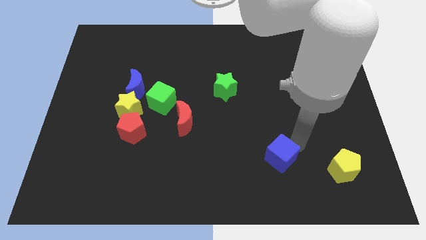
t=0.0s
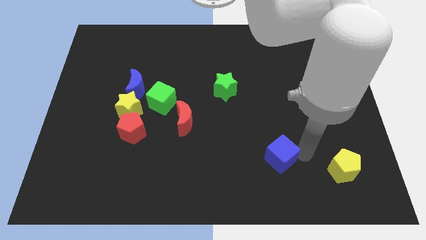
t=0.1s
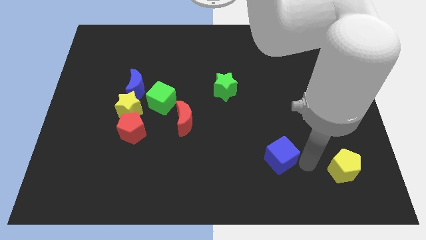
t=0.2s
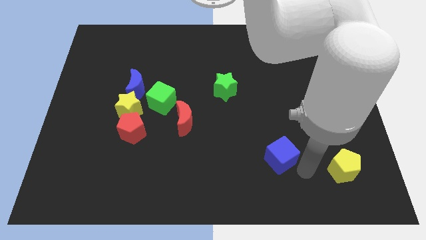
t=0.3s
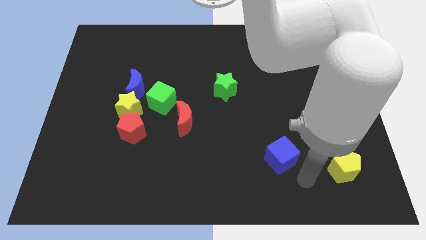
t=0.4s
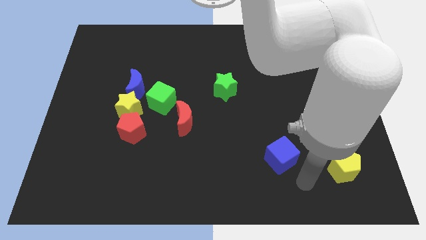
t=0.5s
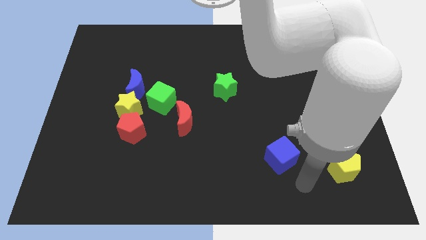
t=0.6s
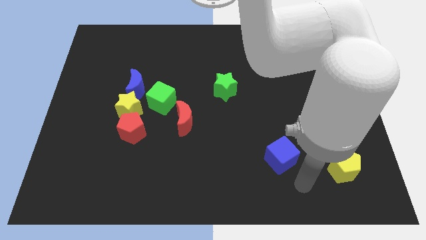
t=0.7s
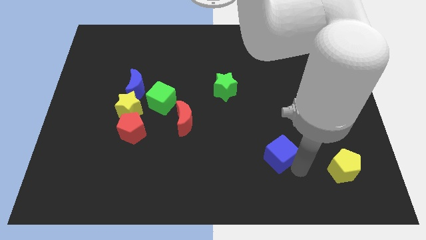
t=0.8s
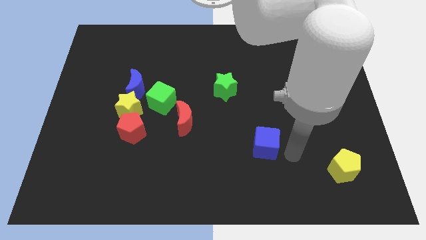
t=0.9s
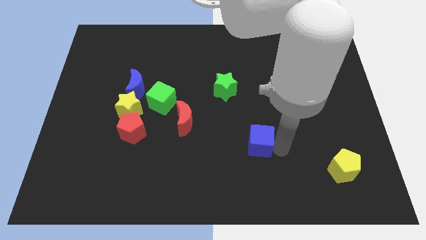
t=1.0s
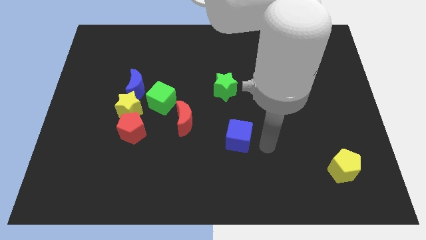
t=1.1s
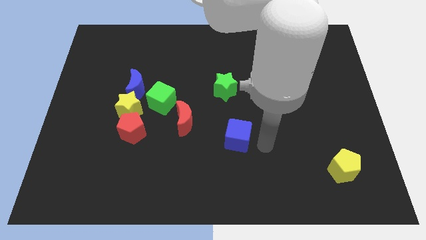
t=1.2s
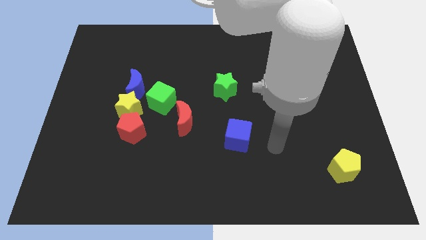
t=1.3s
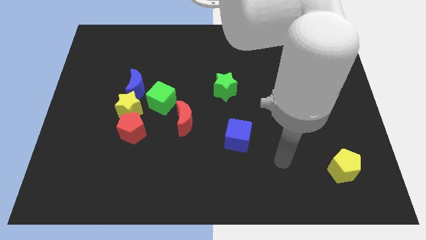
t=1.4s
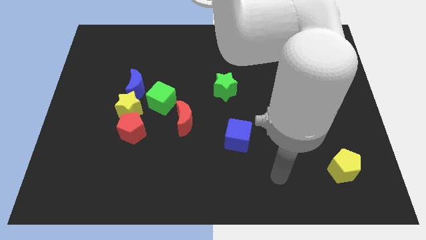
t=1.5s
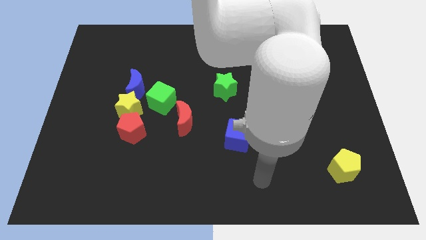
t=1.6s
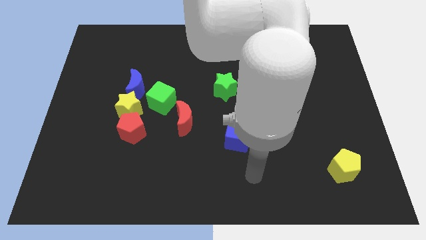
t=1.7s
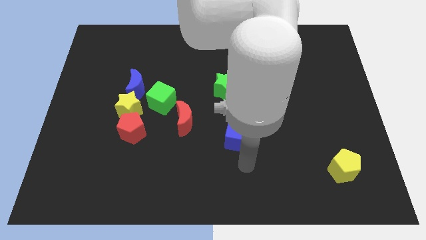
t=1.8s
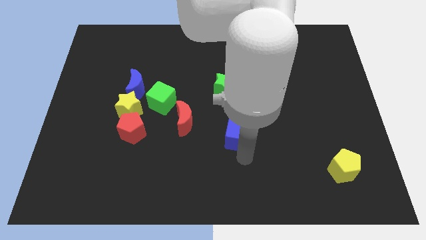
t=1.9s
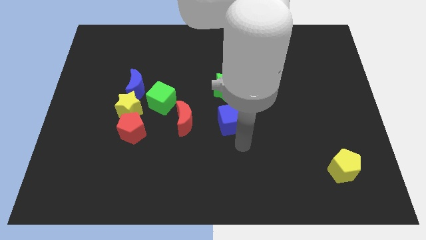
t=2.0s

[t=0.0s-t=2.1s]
push the blue cube to the bottom of the green star

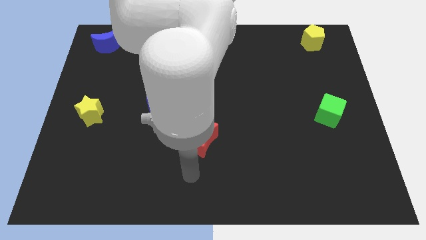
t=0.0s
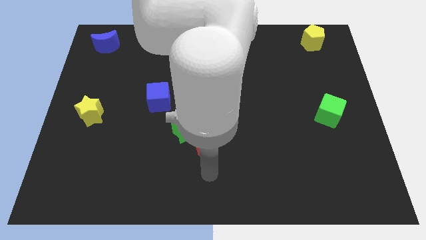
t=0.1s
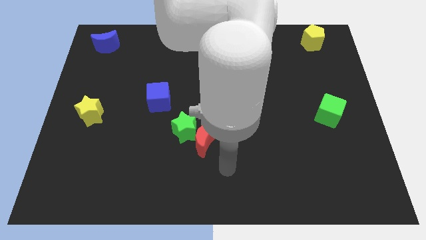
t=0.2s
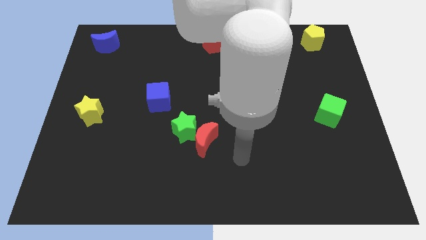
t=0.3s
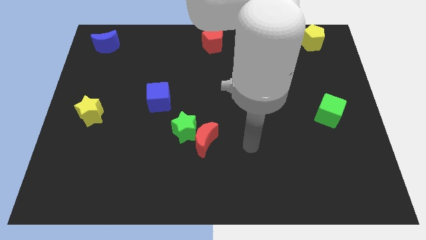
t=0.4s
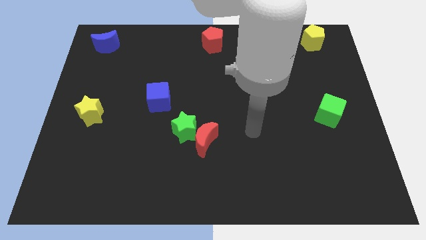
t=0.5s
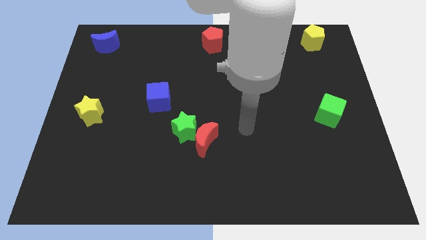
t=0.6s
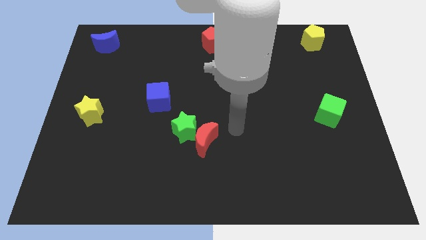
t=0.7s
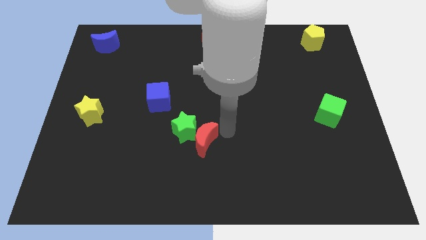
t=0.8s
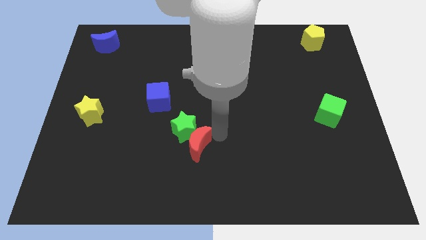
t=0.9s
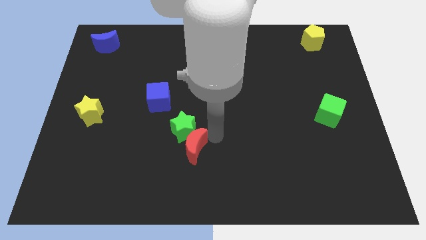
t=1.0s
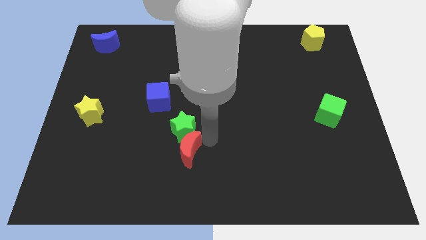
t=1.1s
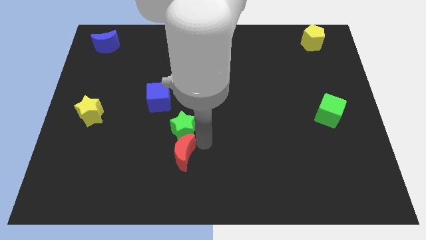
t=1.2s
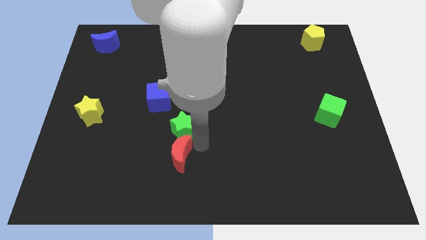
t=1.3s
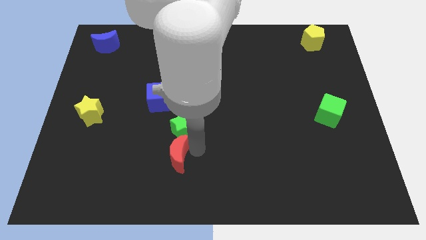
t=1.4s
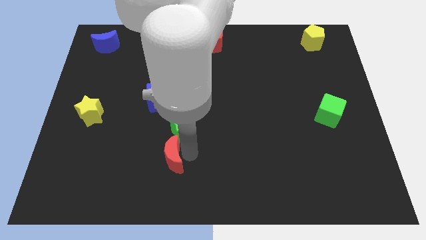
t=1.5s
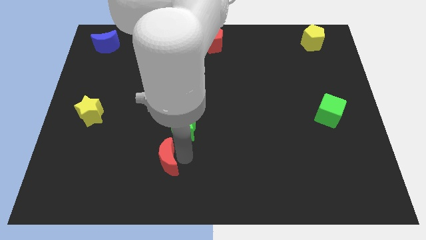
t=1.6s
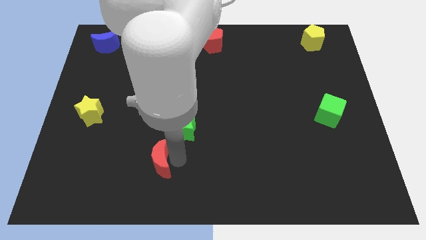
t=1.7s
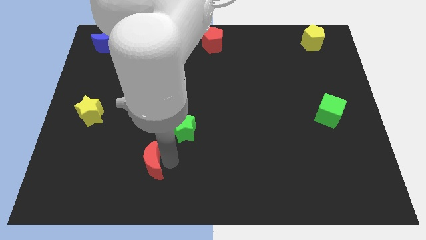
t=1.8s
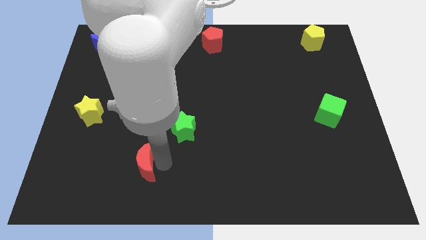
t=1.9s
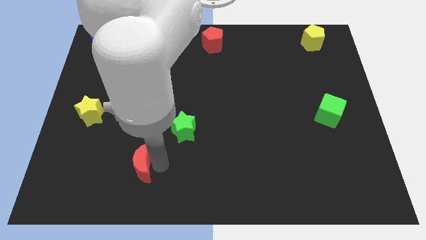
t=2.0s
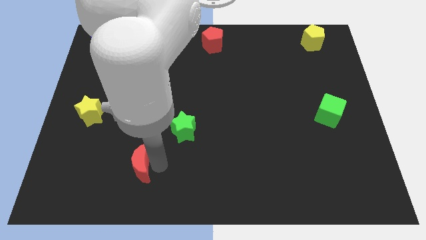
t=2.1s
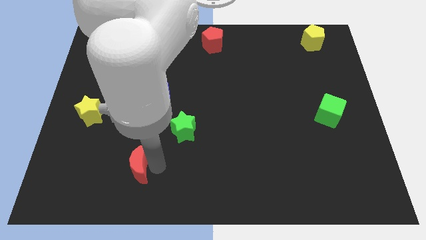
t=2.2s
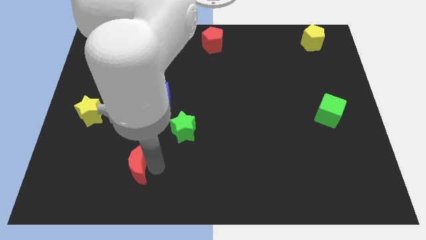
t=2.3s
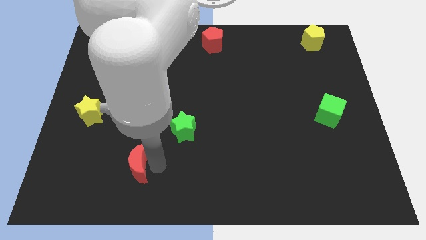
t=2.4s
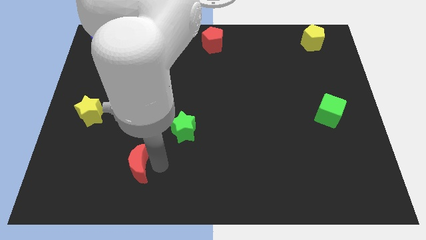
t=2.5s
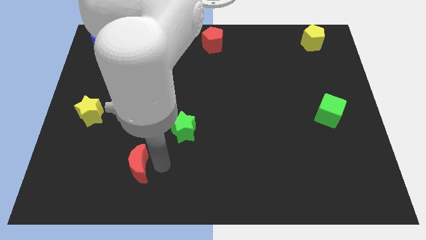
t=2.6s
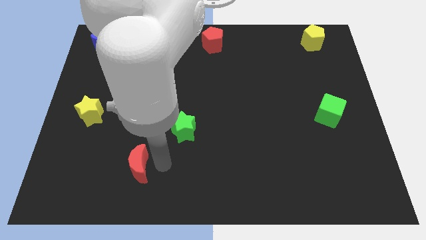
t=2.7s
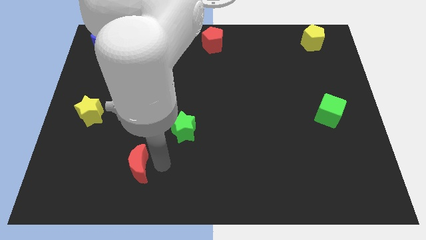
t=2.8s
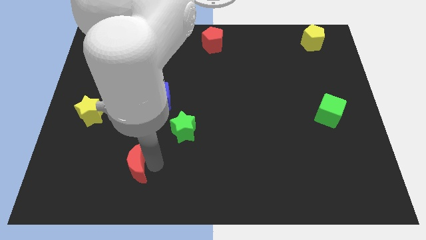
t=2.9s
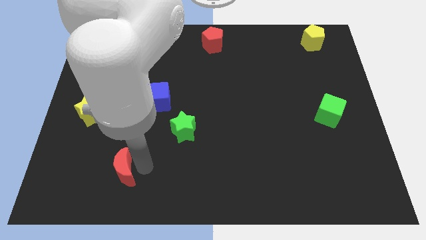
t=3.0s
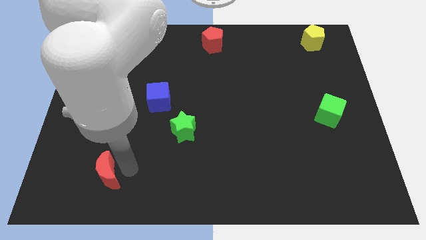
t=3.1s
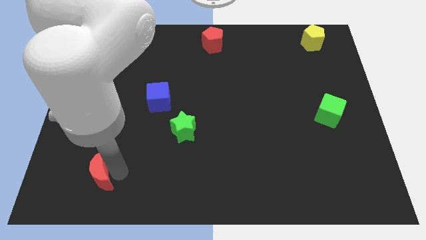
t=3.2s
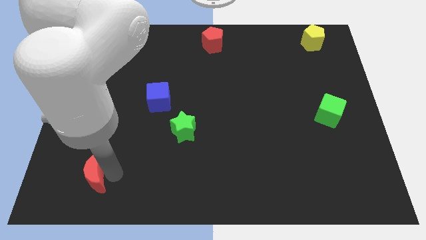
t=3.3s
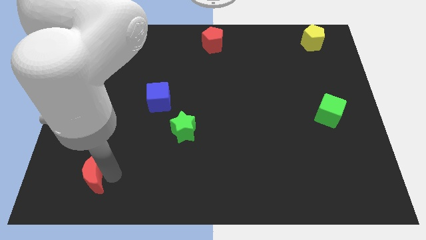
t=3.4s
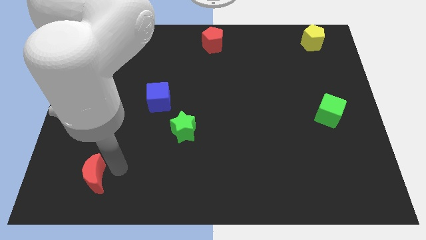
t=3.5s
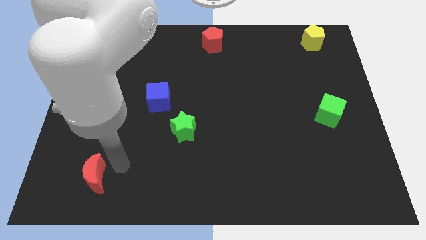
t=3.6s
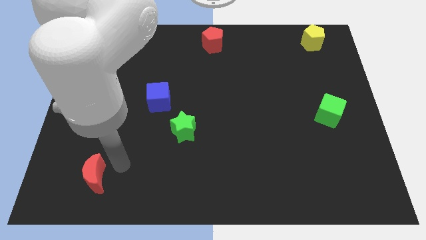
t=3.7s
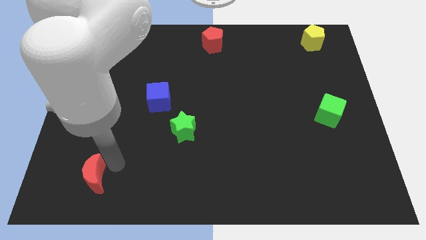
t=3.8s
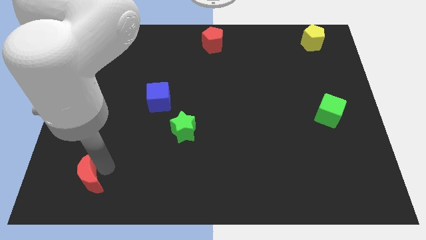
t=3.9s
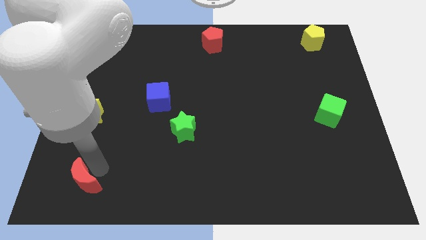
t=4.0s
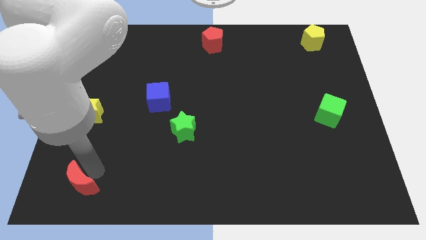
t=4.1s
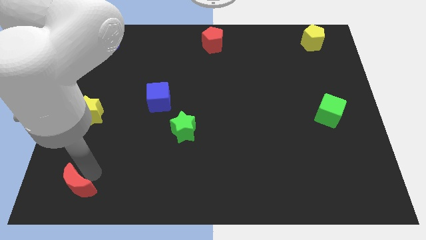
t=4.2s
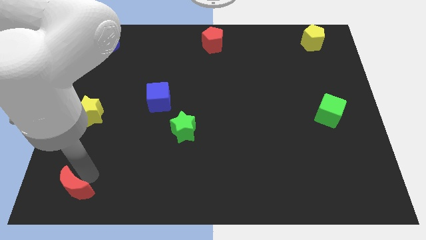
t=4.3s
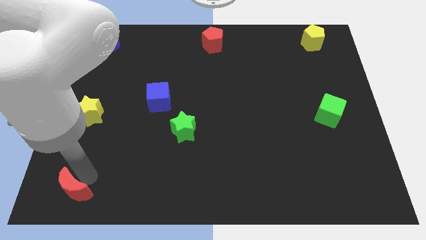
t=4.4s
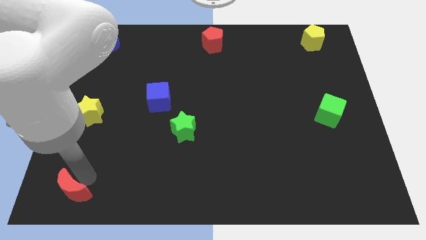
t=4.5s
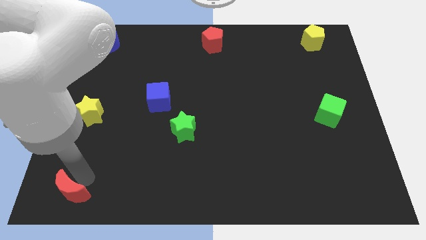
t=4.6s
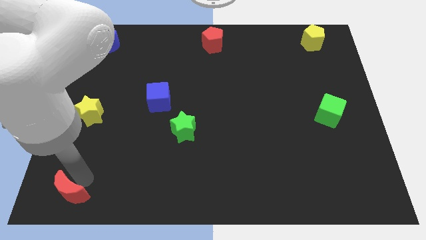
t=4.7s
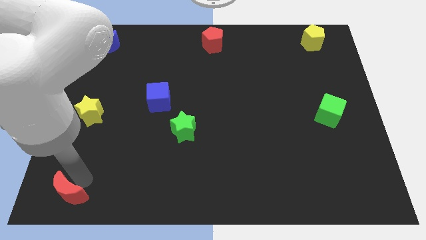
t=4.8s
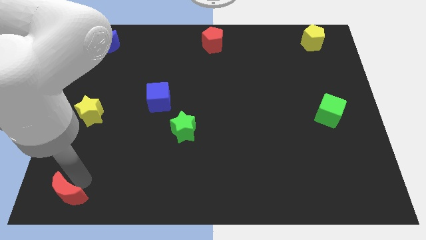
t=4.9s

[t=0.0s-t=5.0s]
move the red crescent away from the right side of the green star

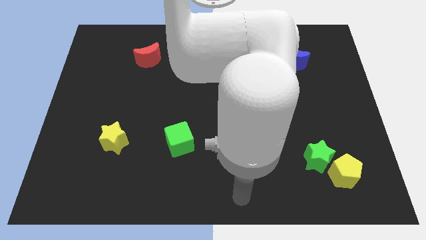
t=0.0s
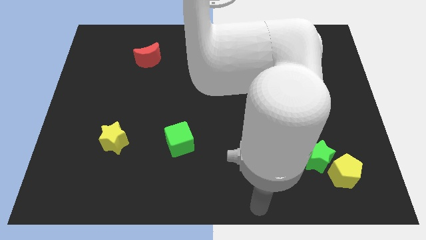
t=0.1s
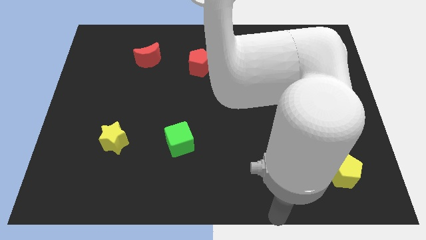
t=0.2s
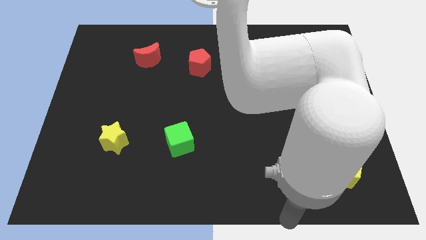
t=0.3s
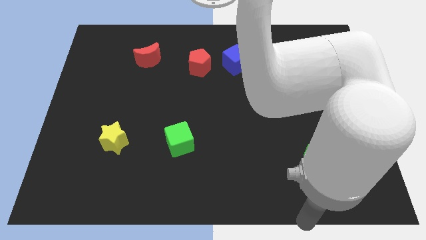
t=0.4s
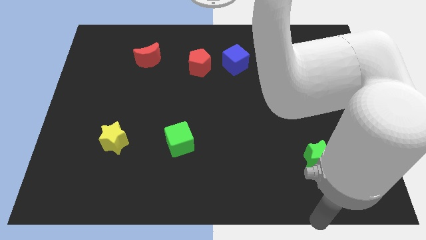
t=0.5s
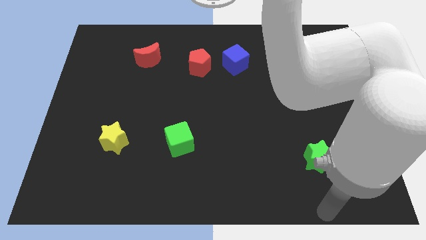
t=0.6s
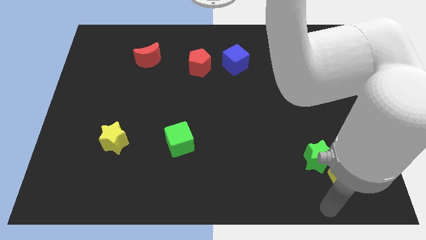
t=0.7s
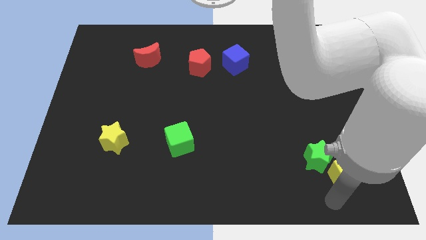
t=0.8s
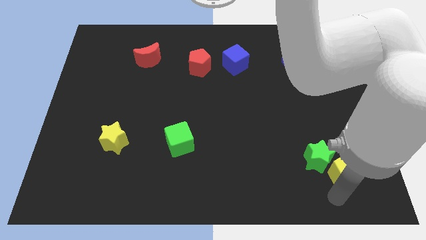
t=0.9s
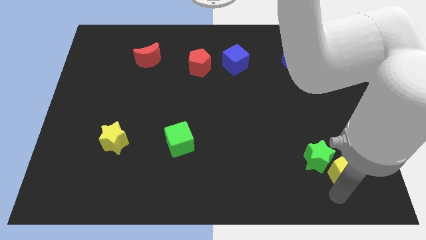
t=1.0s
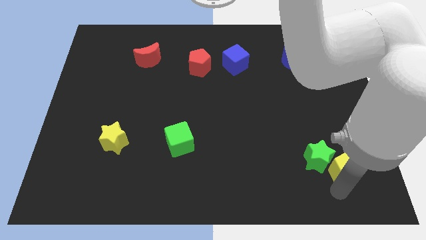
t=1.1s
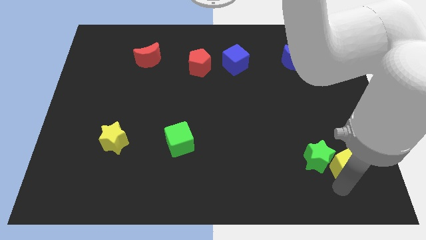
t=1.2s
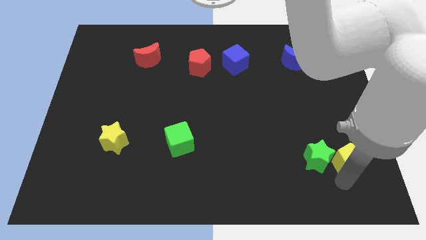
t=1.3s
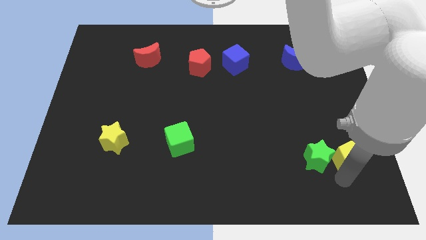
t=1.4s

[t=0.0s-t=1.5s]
slightly push the yellow pentagon to the right of the green star

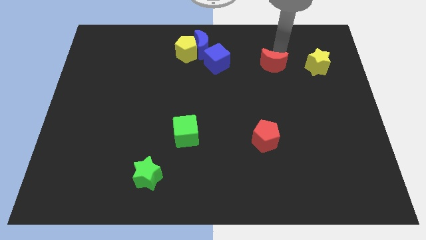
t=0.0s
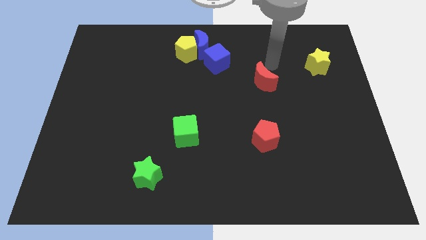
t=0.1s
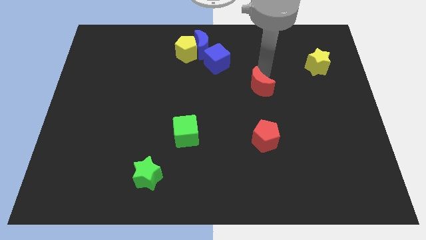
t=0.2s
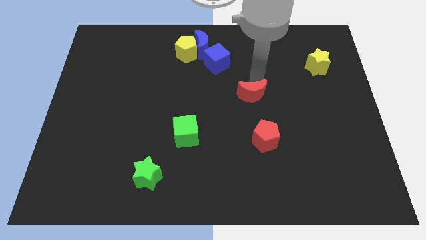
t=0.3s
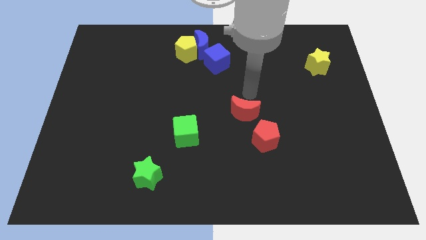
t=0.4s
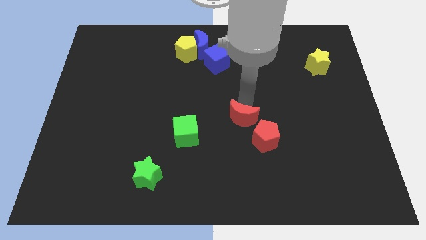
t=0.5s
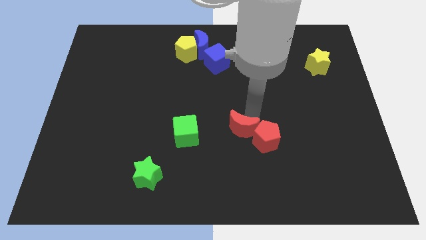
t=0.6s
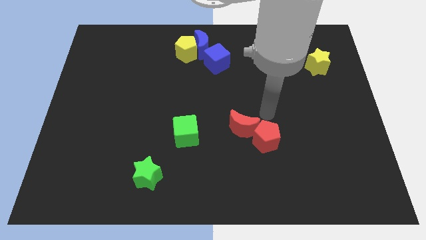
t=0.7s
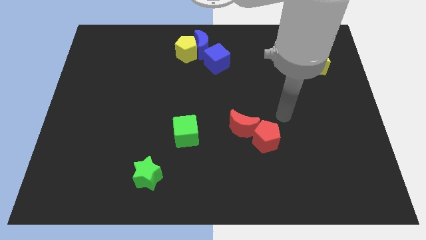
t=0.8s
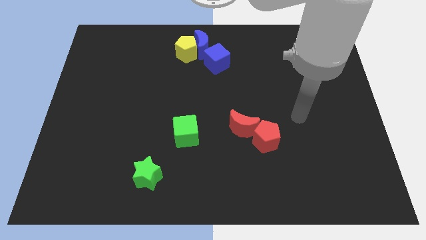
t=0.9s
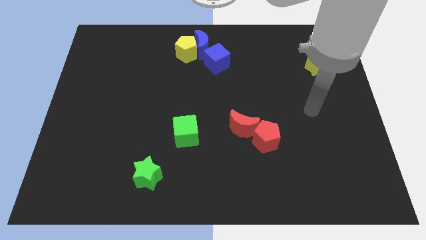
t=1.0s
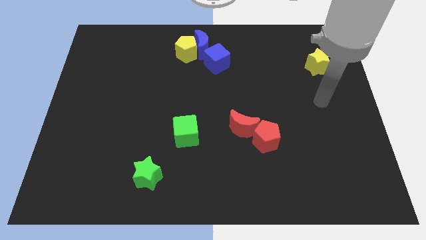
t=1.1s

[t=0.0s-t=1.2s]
move the red crescent to the left of the red pentagon
